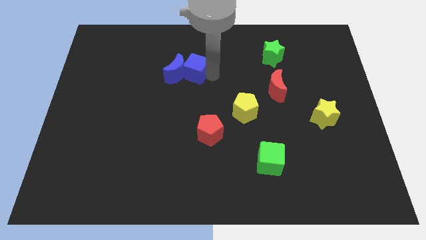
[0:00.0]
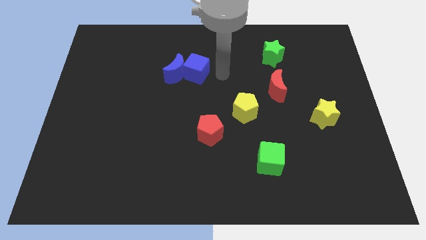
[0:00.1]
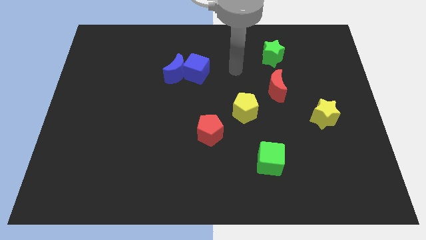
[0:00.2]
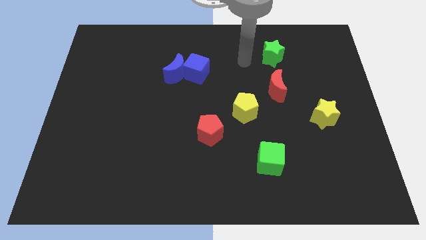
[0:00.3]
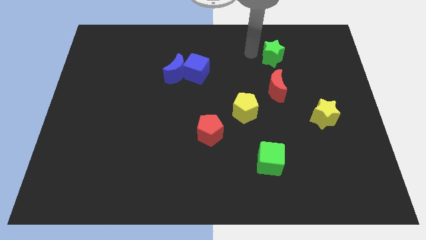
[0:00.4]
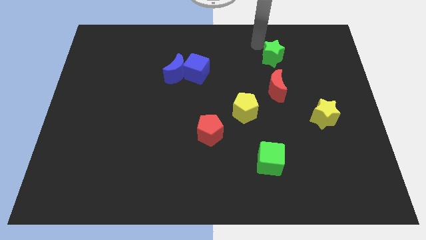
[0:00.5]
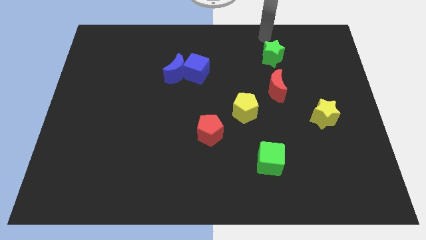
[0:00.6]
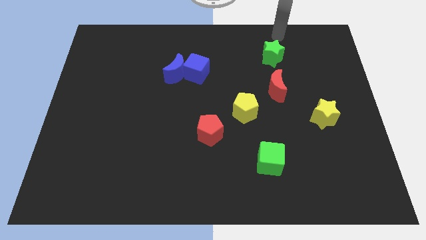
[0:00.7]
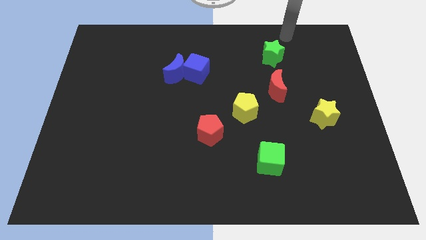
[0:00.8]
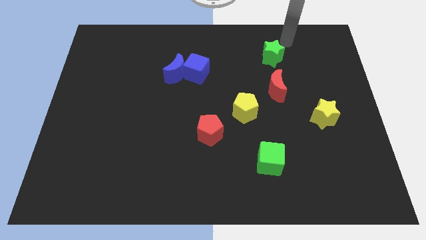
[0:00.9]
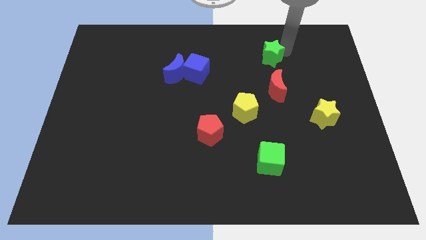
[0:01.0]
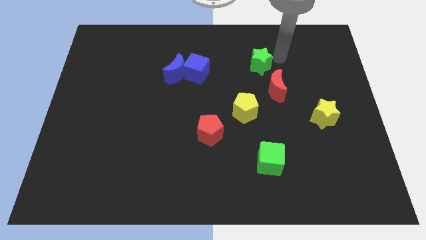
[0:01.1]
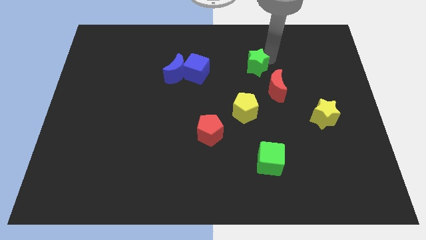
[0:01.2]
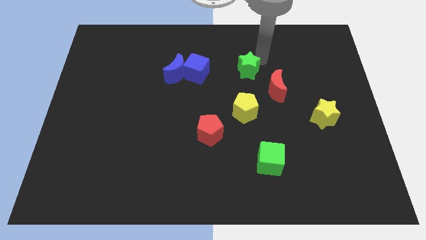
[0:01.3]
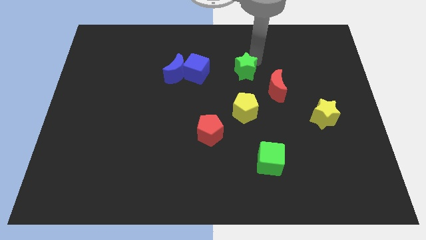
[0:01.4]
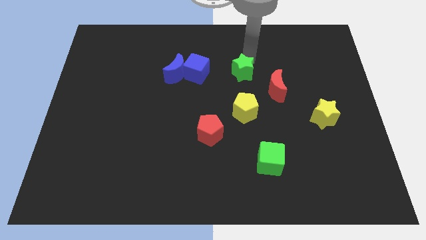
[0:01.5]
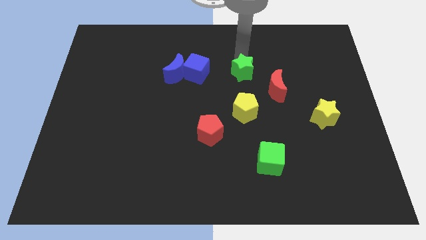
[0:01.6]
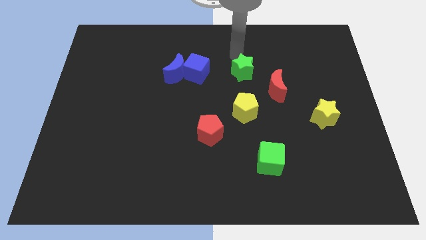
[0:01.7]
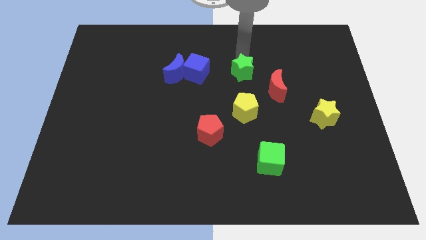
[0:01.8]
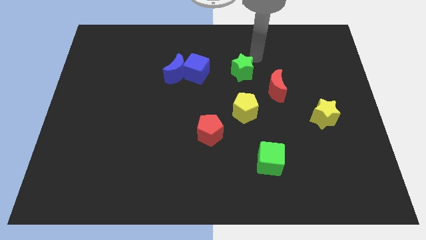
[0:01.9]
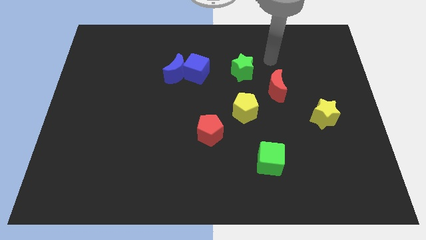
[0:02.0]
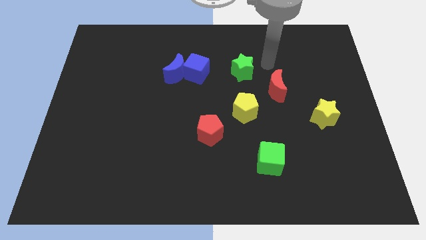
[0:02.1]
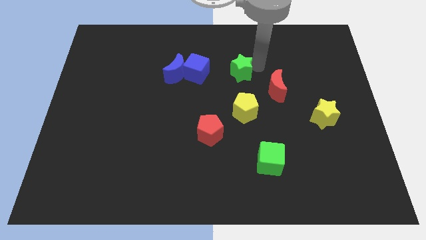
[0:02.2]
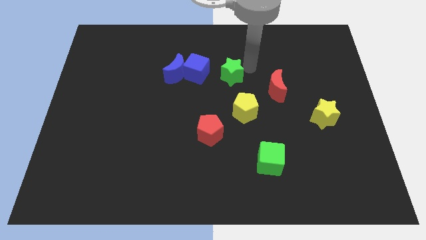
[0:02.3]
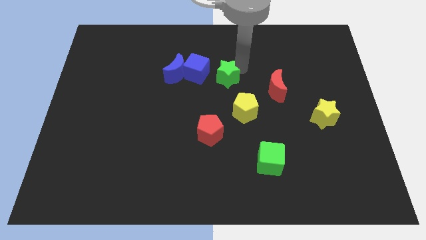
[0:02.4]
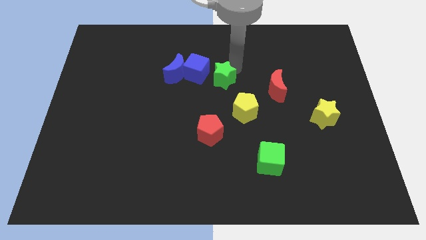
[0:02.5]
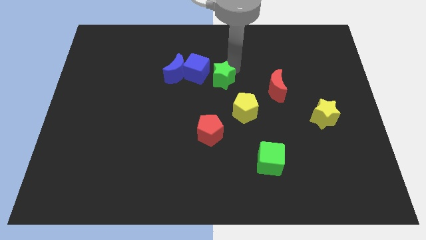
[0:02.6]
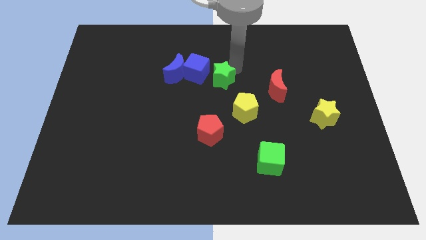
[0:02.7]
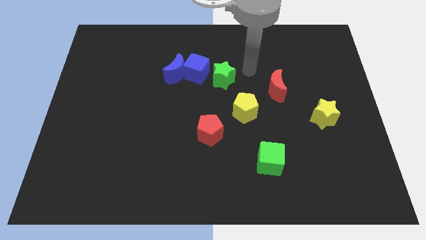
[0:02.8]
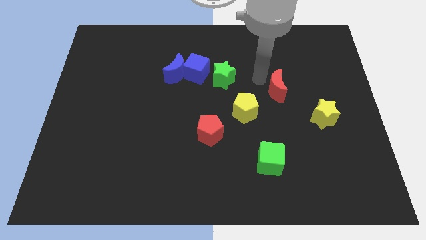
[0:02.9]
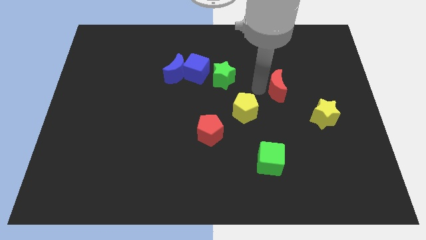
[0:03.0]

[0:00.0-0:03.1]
move the green star close to the blue cube

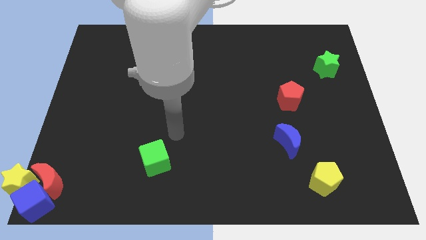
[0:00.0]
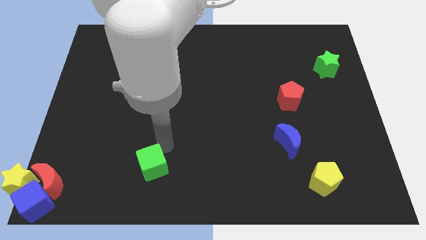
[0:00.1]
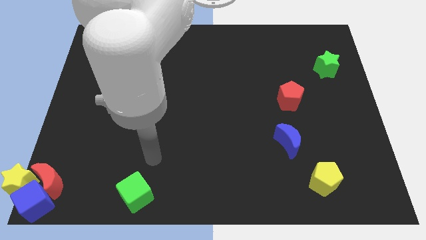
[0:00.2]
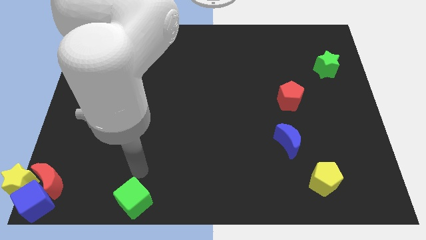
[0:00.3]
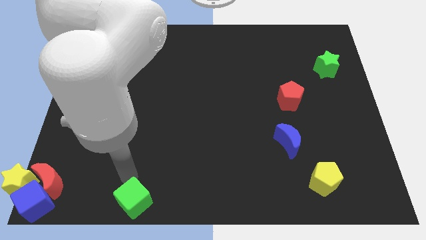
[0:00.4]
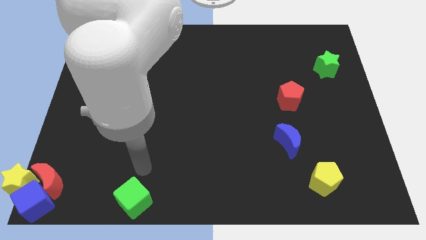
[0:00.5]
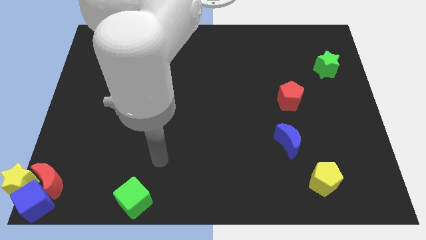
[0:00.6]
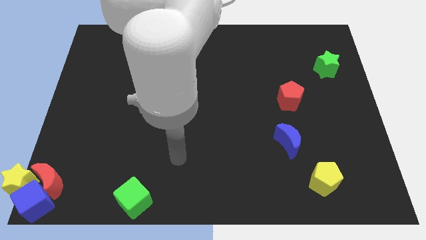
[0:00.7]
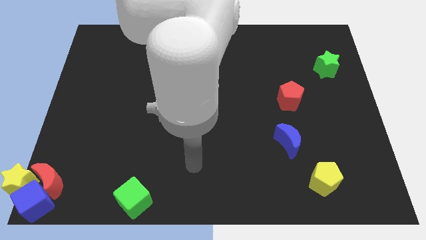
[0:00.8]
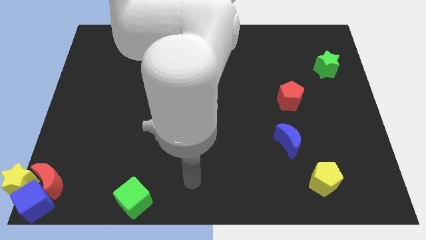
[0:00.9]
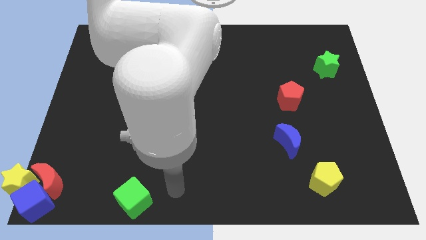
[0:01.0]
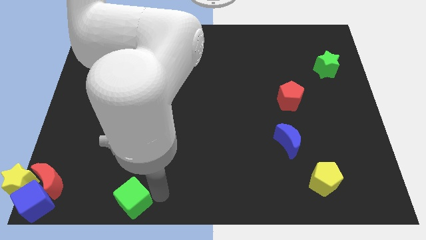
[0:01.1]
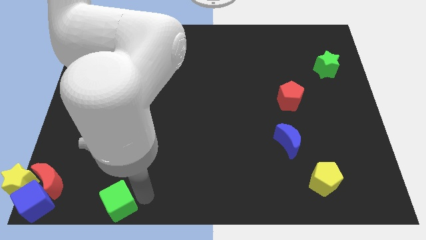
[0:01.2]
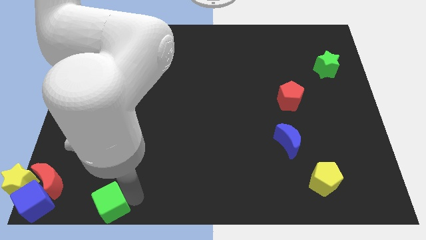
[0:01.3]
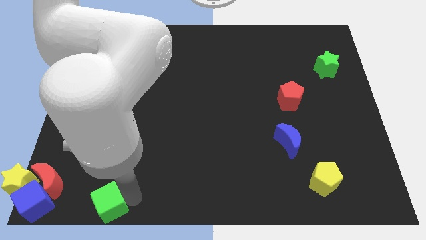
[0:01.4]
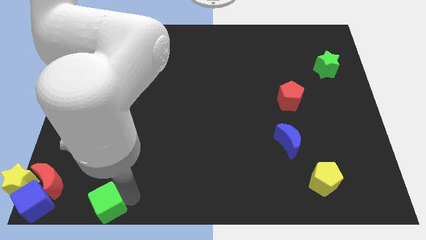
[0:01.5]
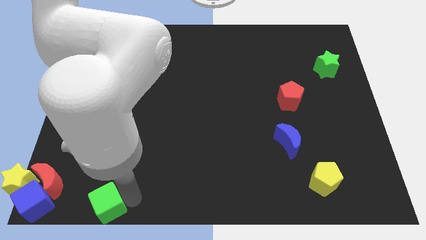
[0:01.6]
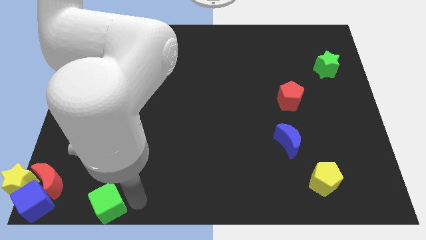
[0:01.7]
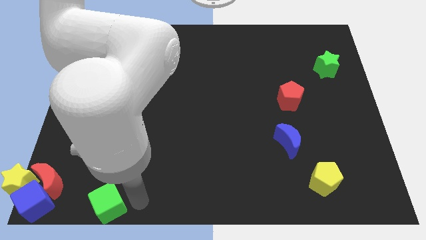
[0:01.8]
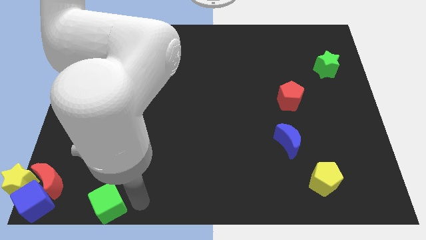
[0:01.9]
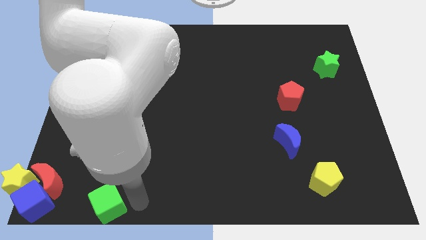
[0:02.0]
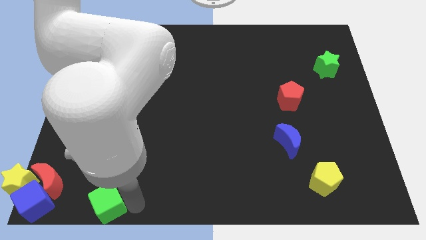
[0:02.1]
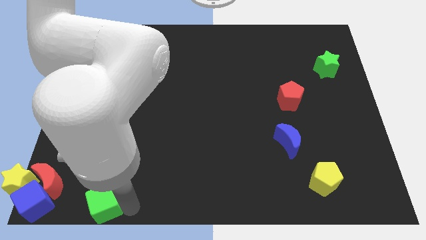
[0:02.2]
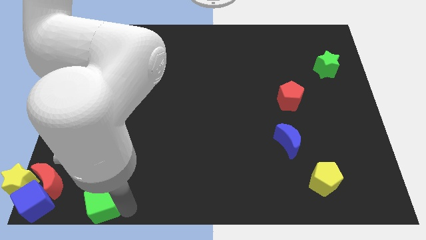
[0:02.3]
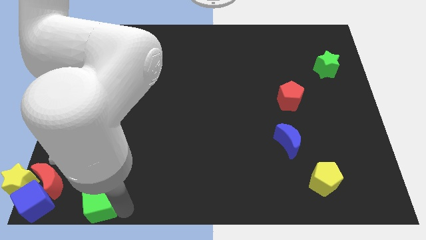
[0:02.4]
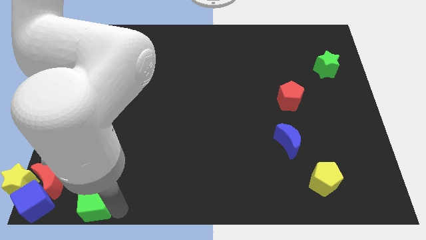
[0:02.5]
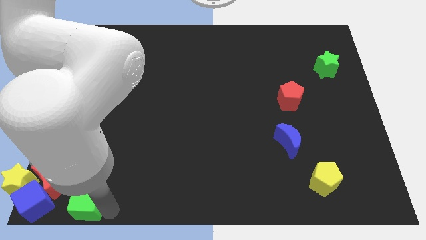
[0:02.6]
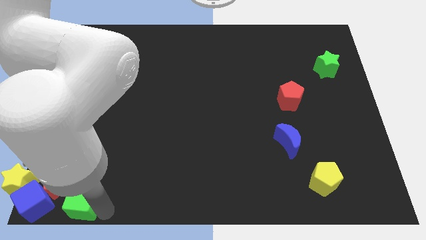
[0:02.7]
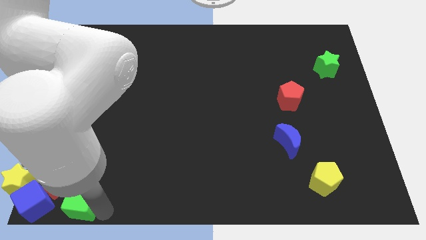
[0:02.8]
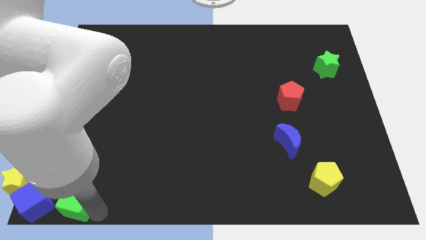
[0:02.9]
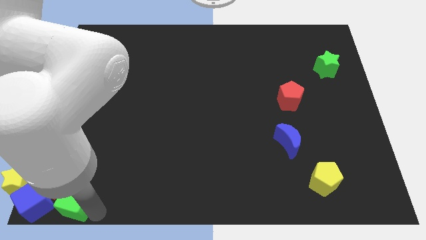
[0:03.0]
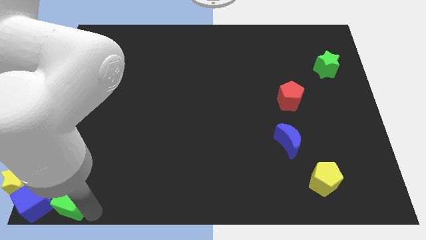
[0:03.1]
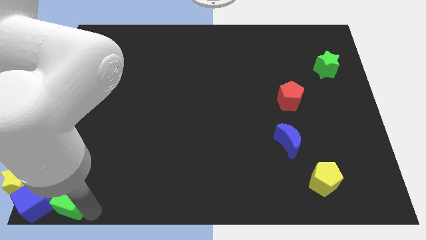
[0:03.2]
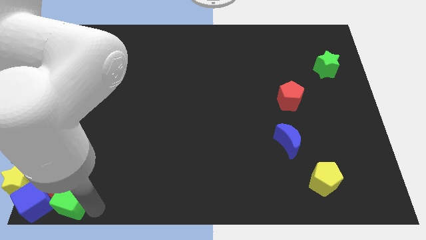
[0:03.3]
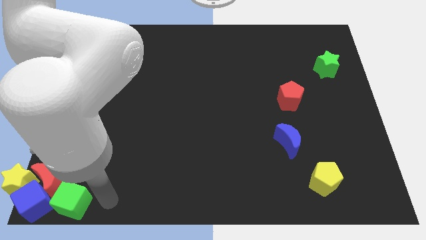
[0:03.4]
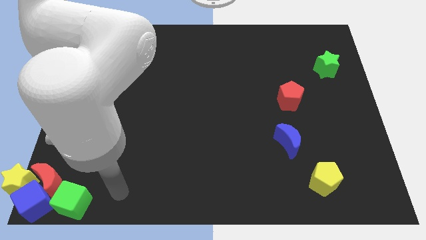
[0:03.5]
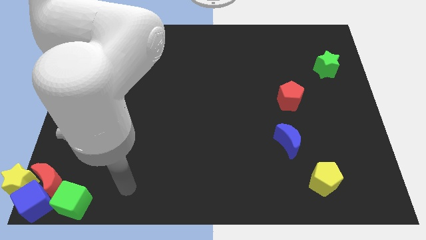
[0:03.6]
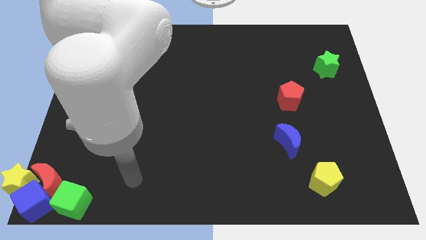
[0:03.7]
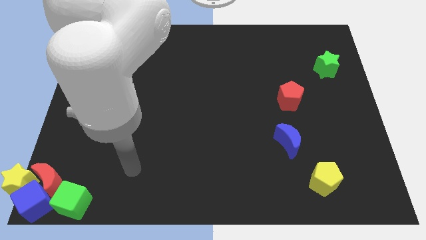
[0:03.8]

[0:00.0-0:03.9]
place the green cube towards the blue cube

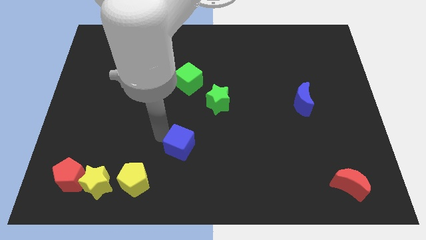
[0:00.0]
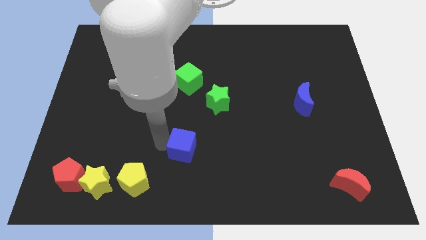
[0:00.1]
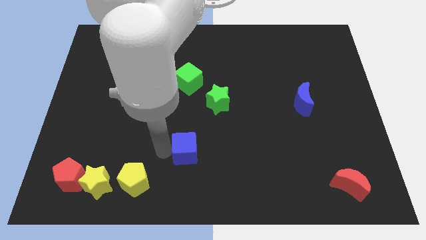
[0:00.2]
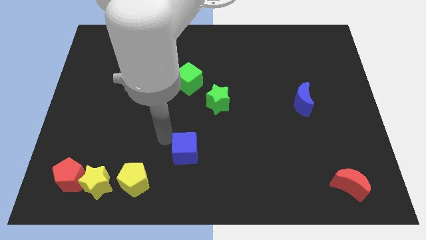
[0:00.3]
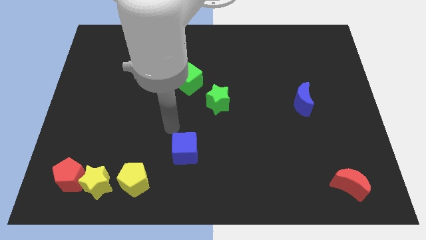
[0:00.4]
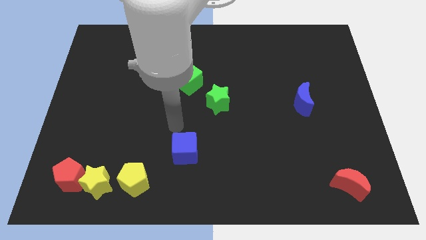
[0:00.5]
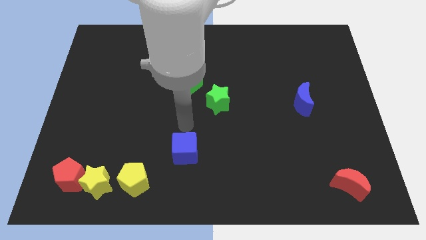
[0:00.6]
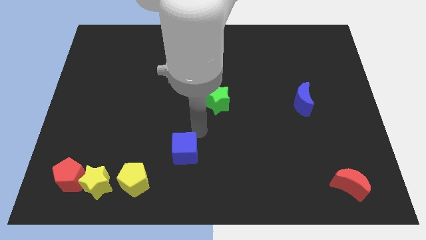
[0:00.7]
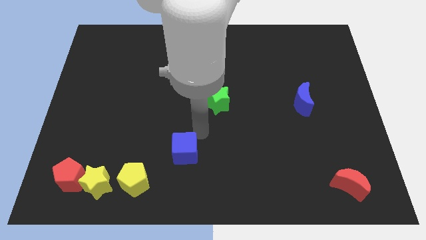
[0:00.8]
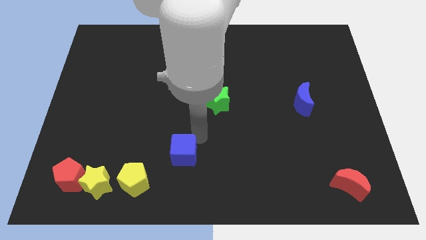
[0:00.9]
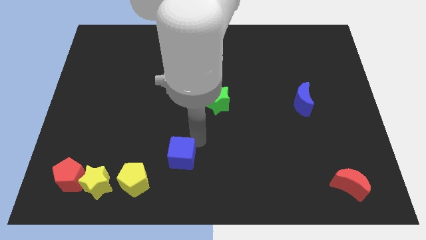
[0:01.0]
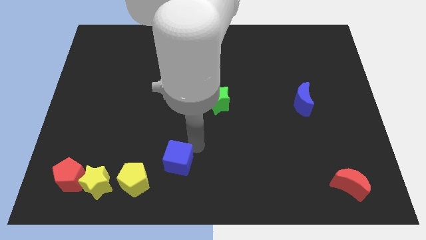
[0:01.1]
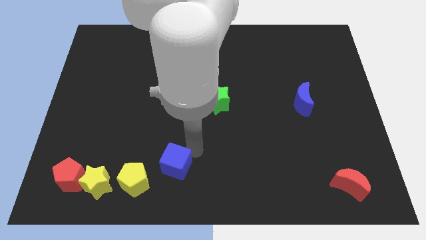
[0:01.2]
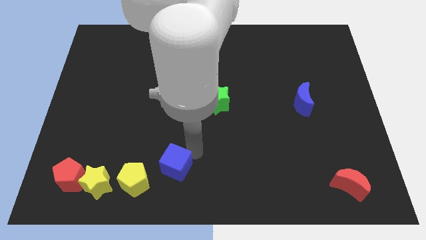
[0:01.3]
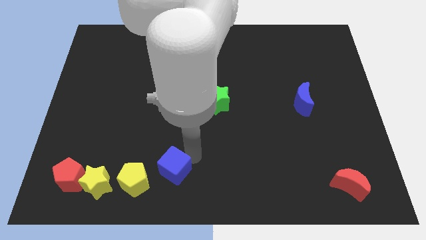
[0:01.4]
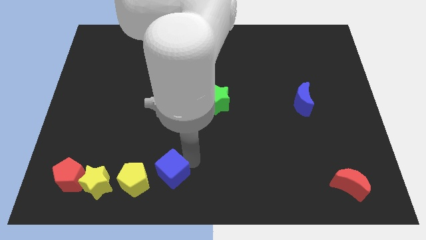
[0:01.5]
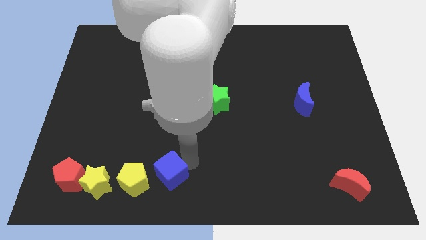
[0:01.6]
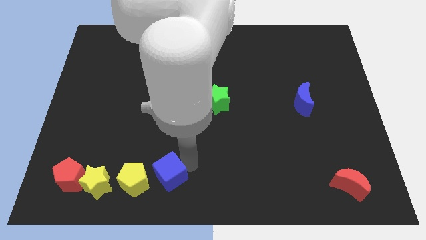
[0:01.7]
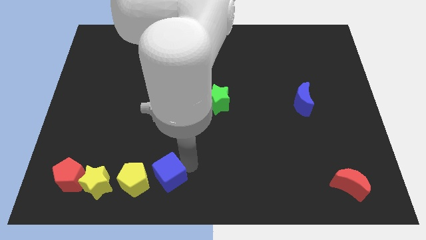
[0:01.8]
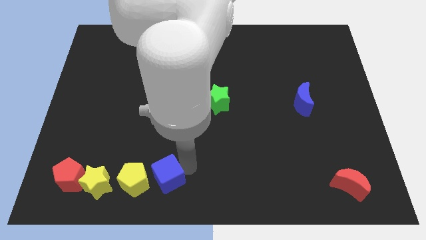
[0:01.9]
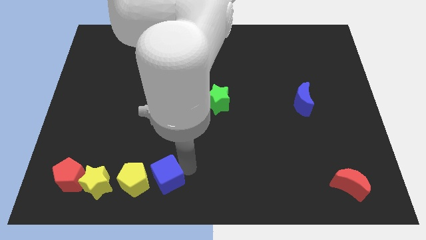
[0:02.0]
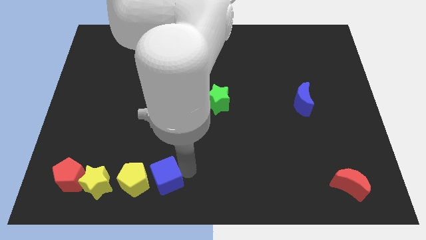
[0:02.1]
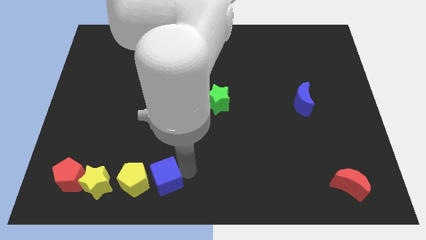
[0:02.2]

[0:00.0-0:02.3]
move the blue cube to the right of the yellow pentagon
